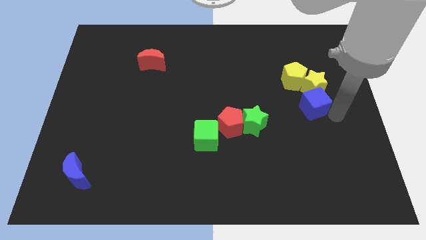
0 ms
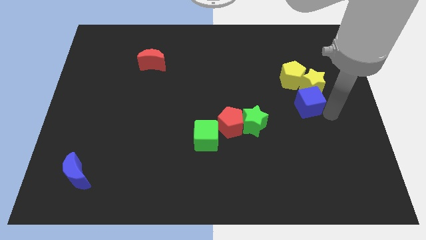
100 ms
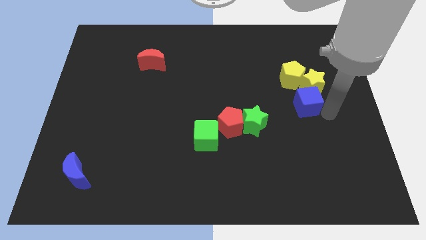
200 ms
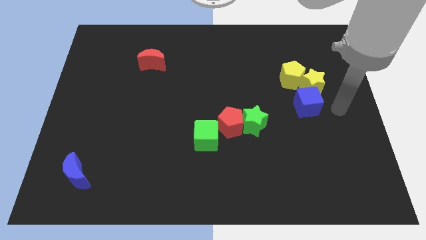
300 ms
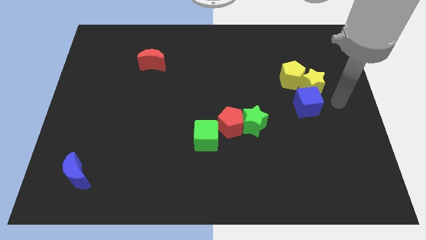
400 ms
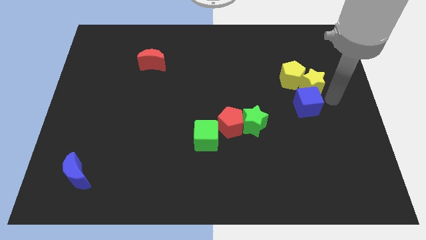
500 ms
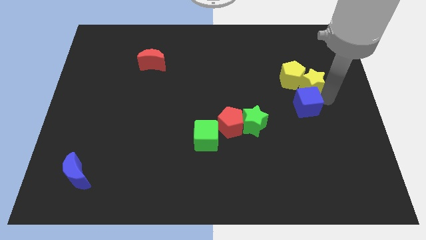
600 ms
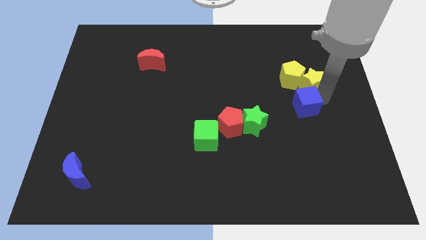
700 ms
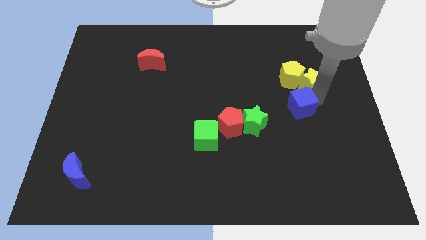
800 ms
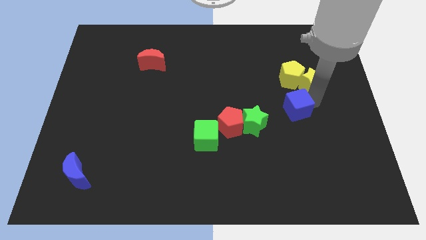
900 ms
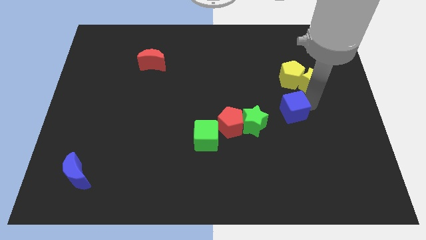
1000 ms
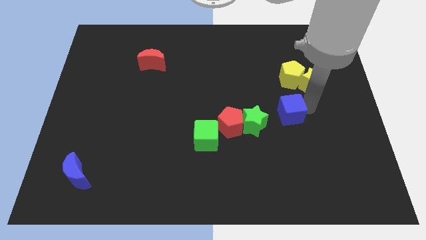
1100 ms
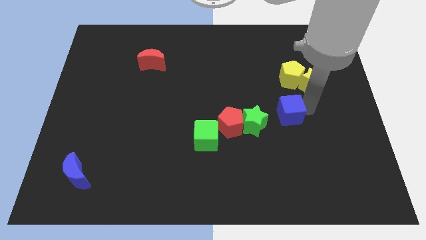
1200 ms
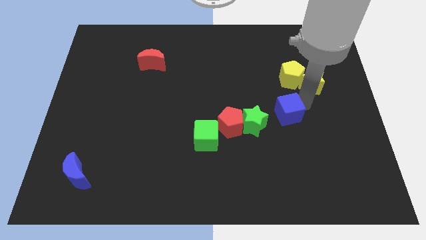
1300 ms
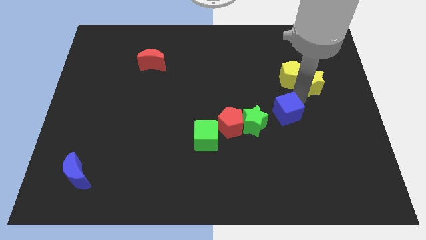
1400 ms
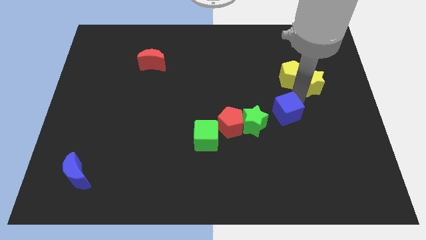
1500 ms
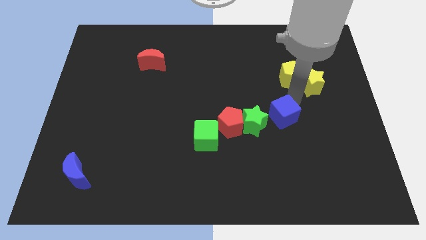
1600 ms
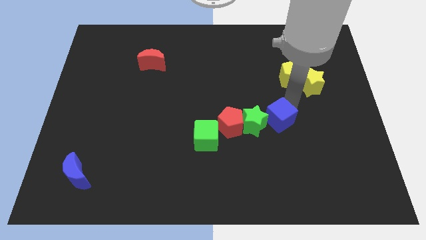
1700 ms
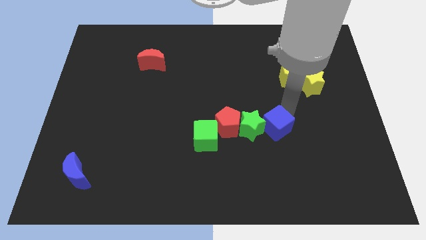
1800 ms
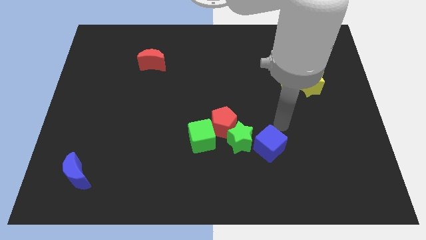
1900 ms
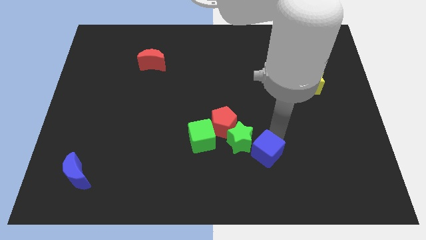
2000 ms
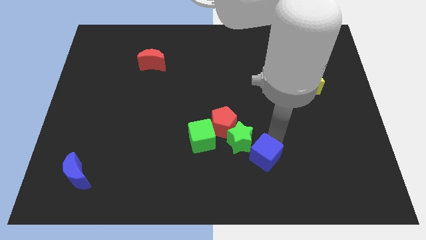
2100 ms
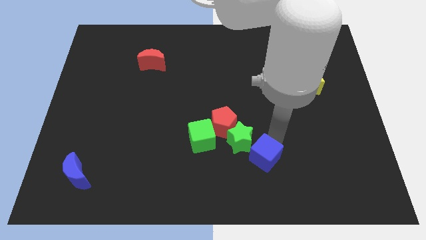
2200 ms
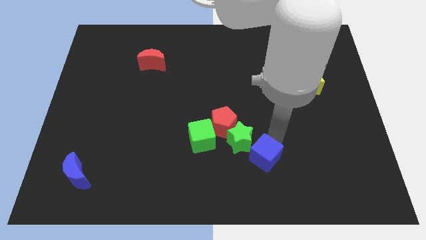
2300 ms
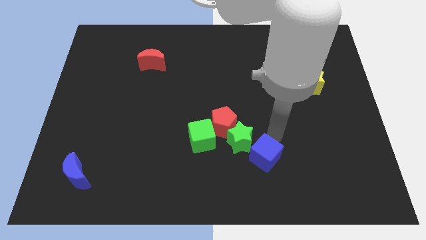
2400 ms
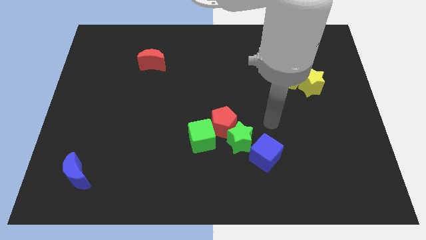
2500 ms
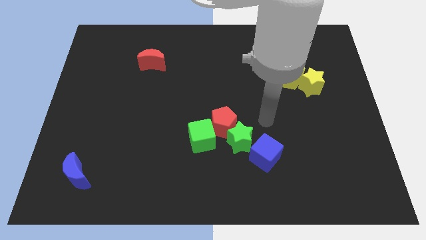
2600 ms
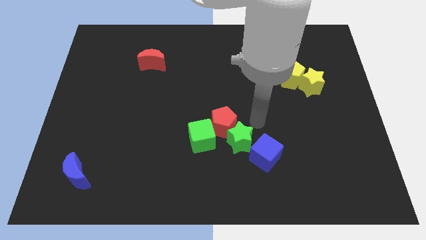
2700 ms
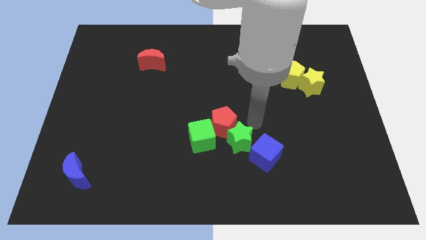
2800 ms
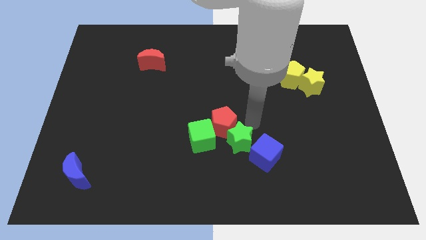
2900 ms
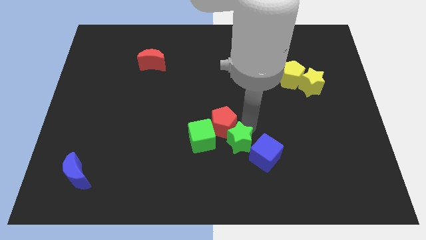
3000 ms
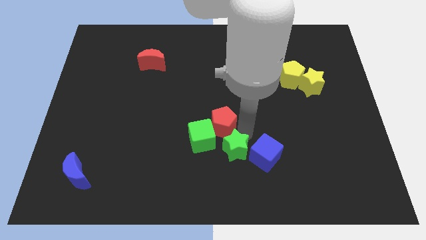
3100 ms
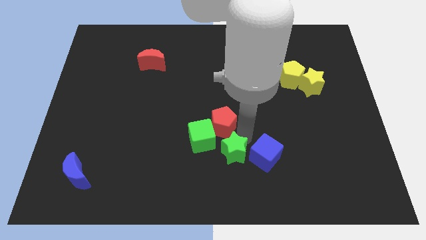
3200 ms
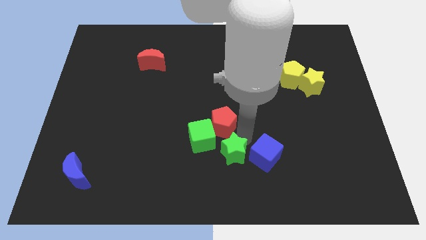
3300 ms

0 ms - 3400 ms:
separate the blue cube from the green star

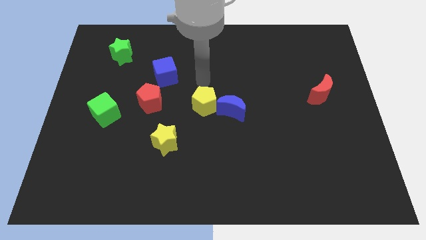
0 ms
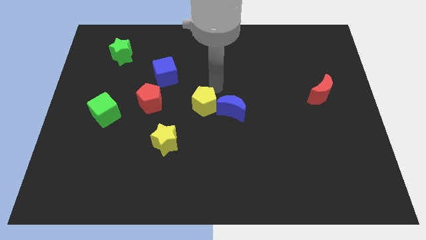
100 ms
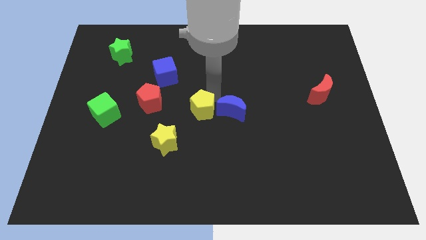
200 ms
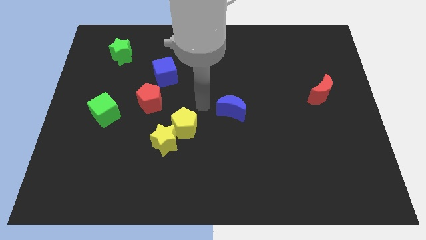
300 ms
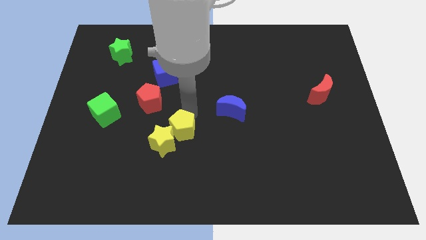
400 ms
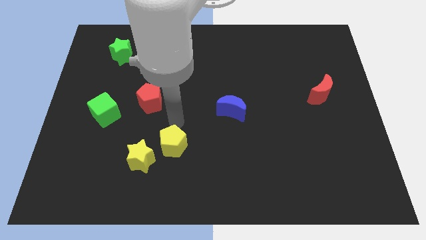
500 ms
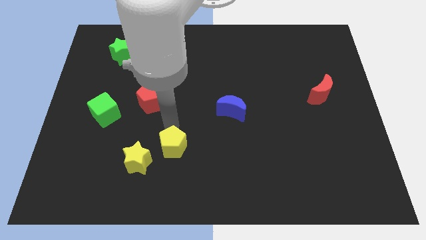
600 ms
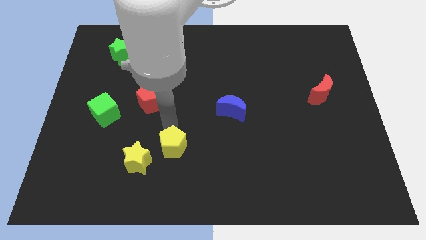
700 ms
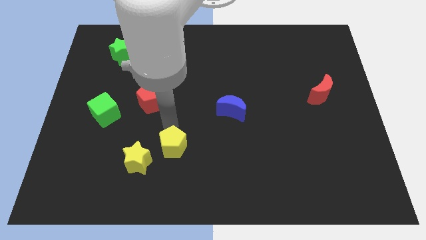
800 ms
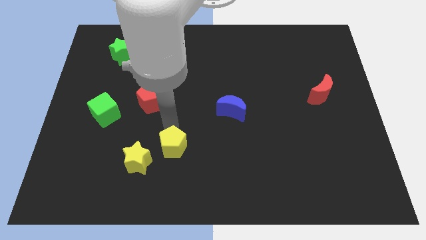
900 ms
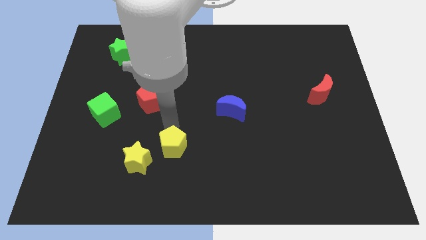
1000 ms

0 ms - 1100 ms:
move yellow pentagon into the yellow star

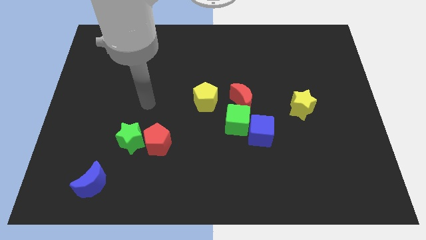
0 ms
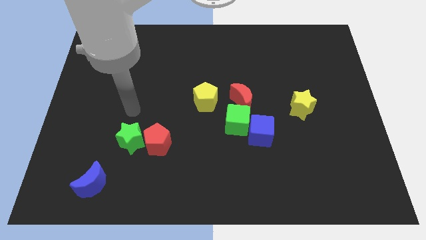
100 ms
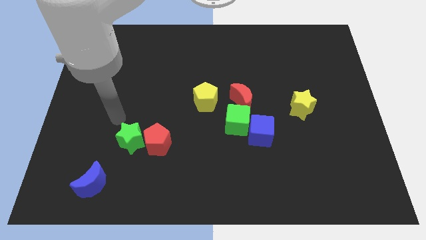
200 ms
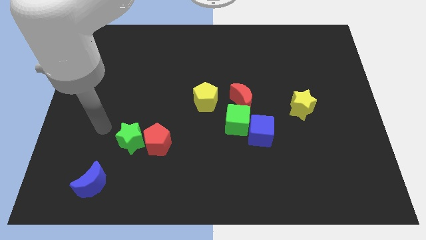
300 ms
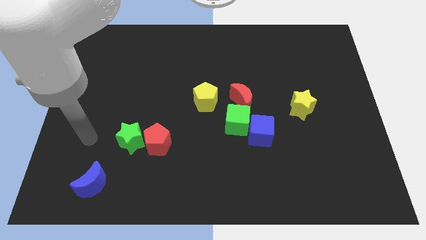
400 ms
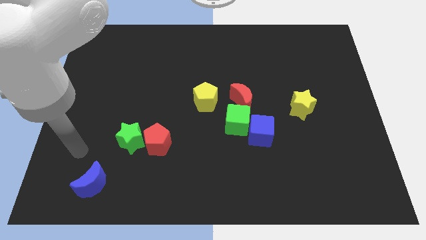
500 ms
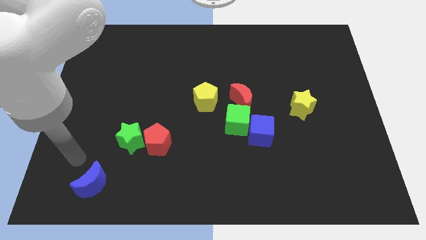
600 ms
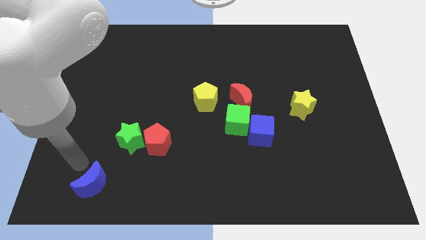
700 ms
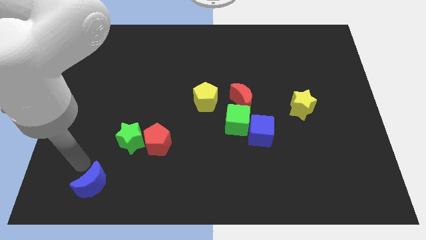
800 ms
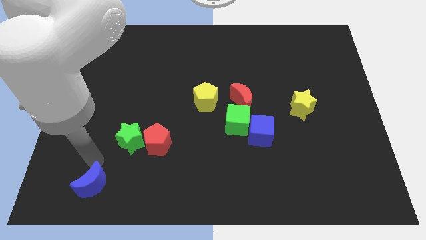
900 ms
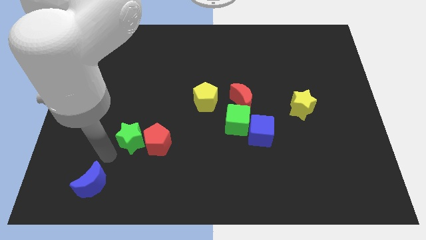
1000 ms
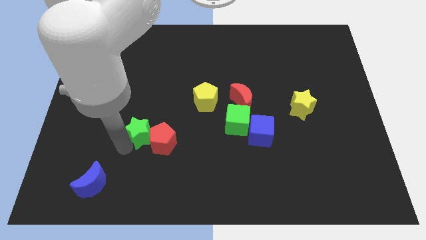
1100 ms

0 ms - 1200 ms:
move your arm close to the green star

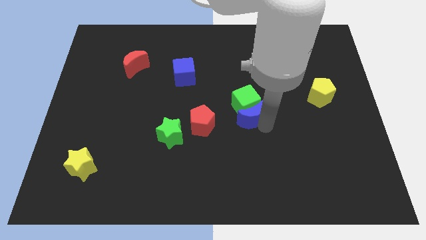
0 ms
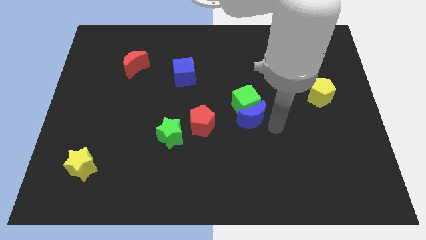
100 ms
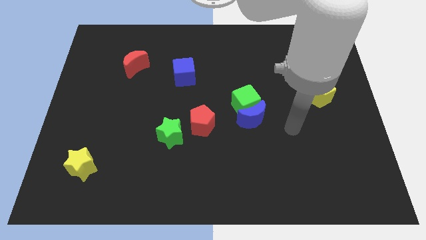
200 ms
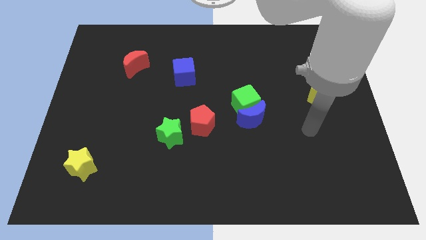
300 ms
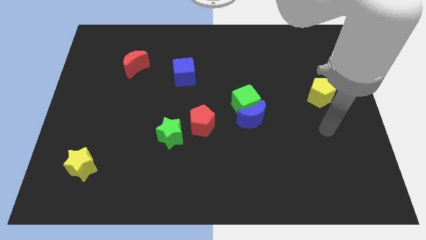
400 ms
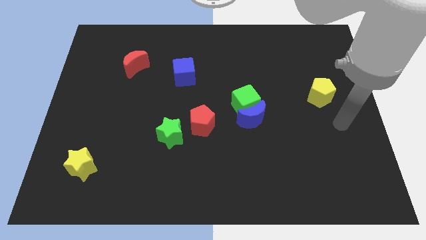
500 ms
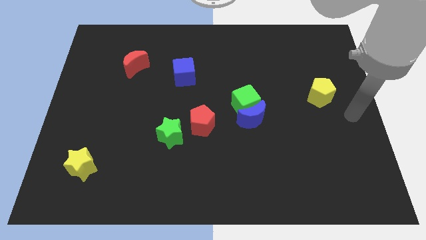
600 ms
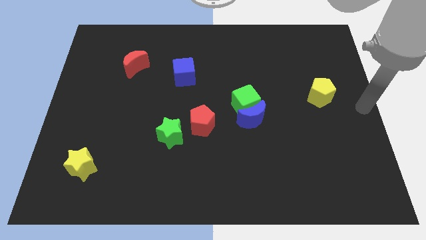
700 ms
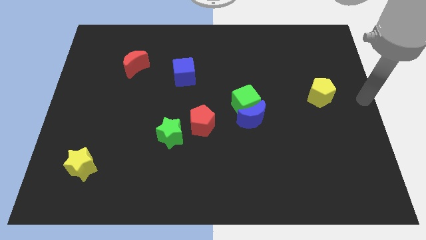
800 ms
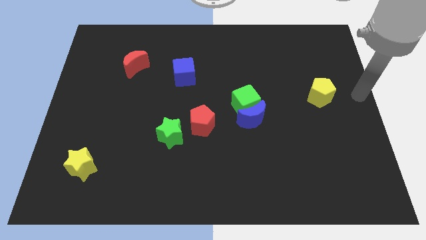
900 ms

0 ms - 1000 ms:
move the arm away from the blue moon

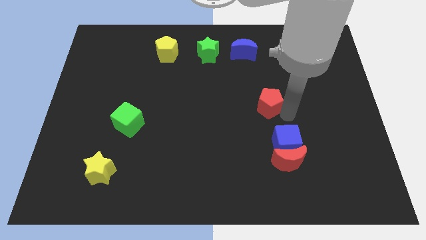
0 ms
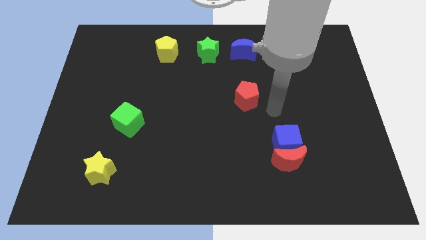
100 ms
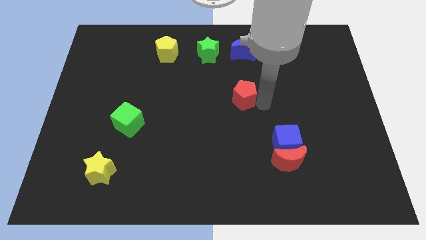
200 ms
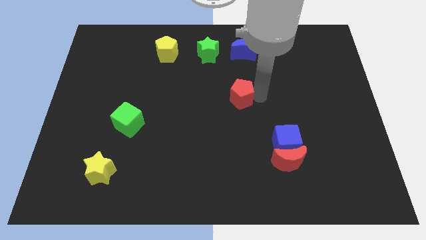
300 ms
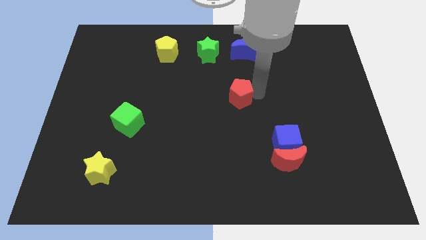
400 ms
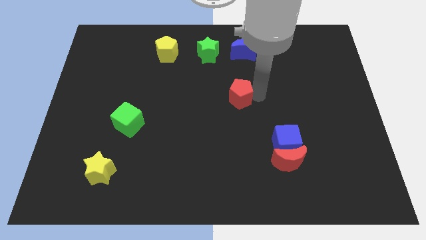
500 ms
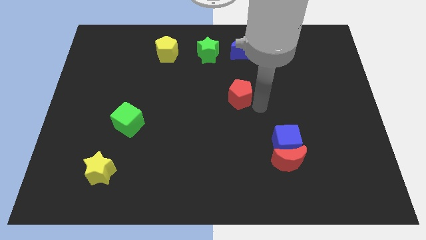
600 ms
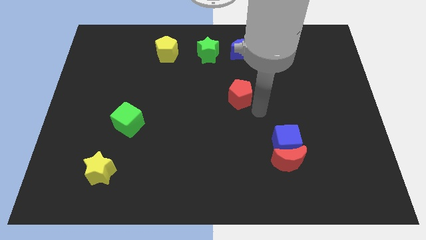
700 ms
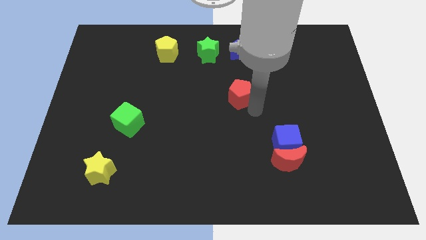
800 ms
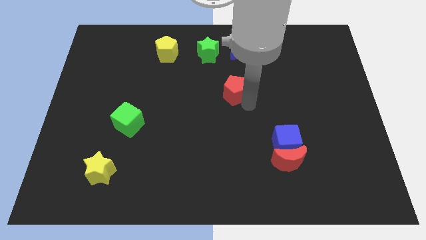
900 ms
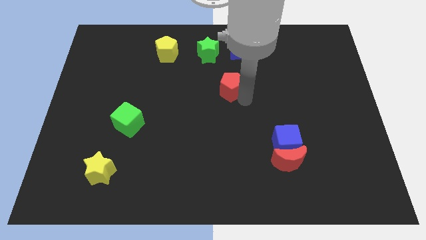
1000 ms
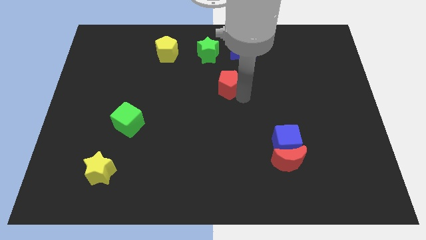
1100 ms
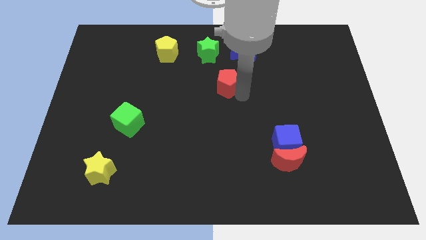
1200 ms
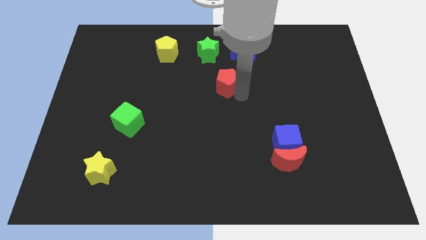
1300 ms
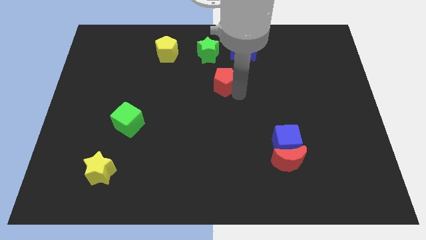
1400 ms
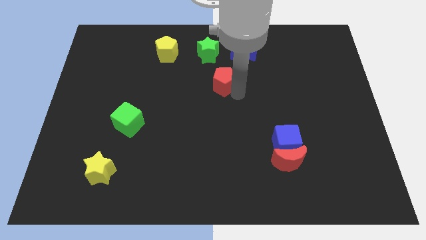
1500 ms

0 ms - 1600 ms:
push the red pentagon to the bottom right of the green star

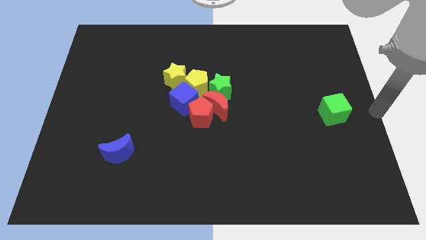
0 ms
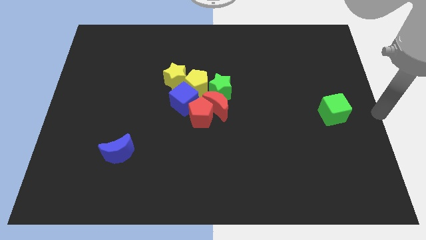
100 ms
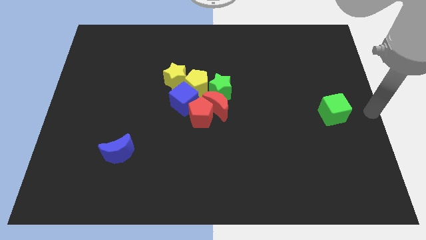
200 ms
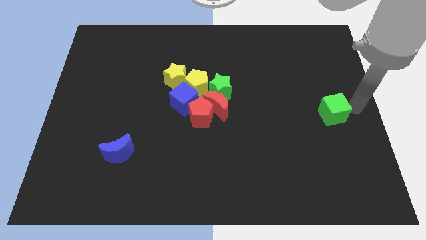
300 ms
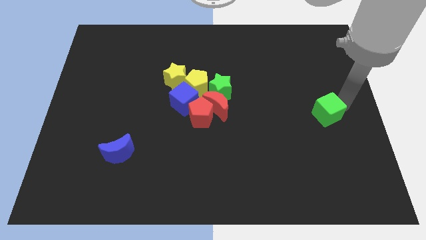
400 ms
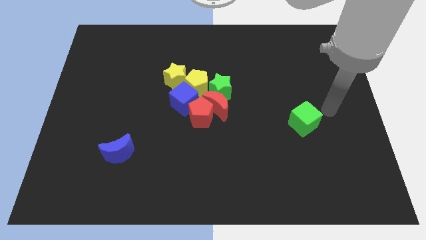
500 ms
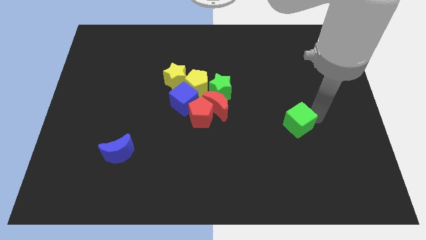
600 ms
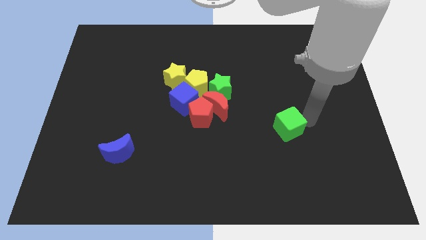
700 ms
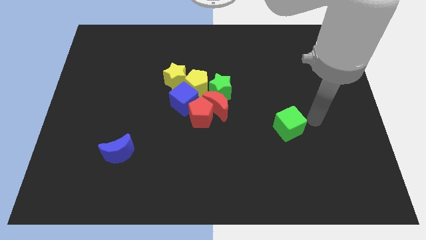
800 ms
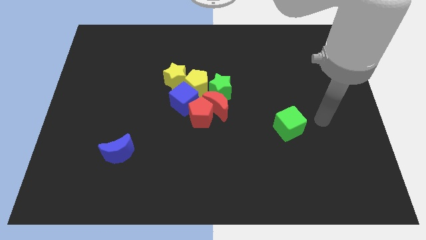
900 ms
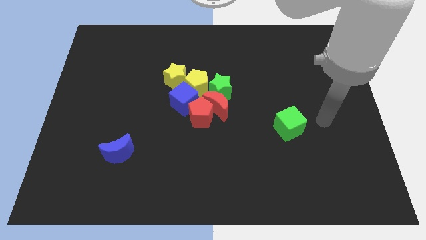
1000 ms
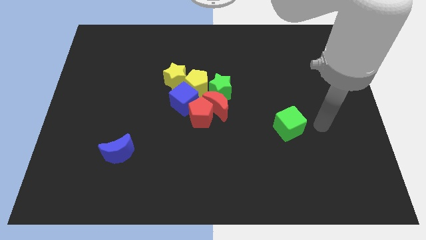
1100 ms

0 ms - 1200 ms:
push the green cube to the left of the board
